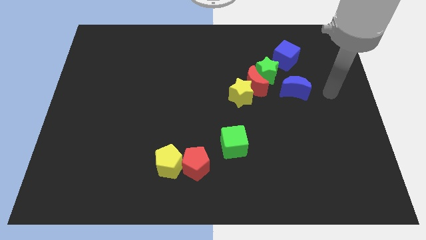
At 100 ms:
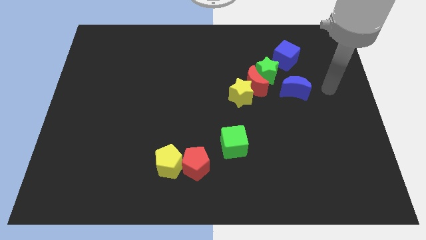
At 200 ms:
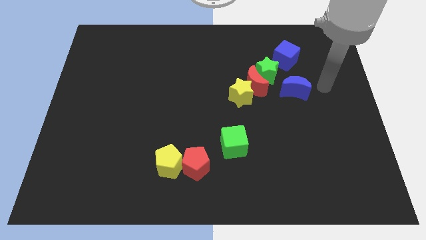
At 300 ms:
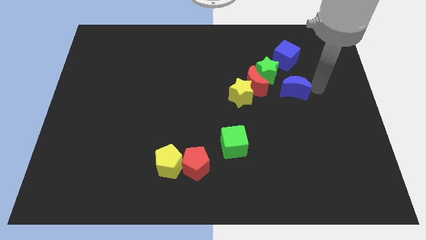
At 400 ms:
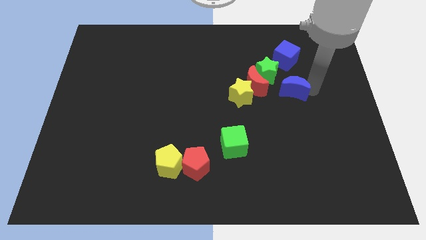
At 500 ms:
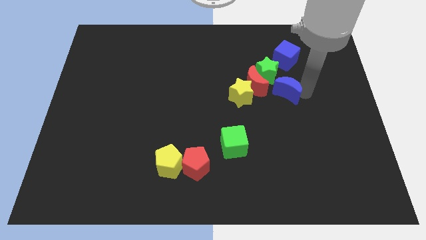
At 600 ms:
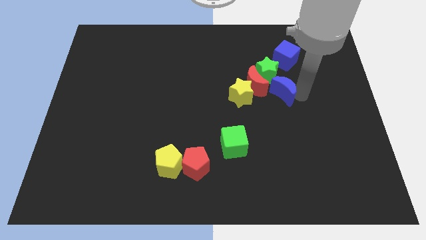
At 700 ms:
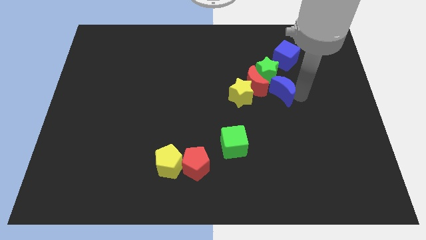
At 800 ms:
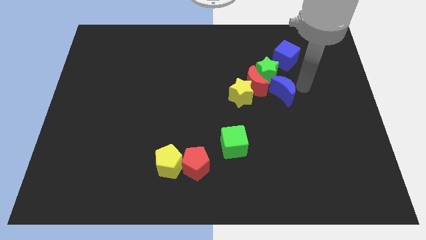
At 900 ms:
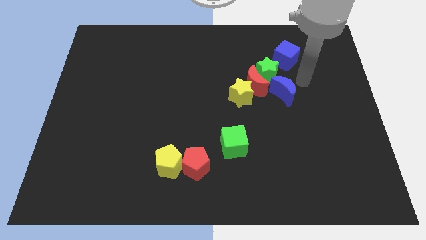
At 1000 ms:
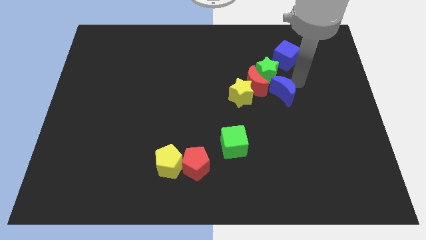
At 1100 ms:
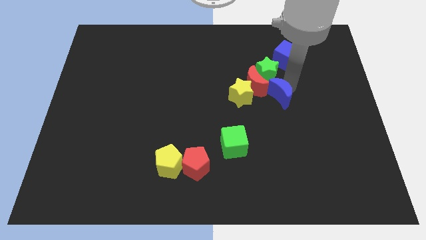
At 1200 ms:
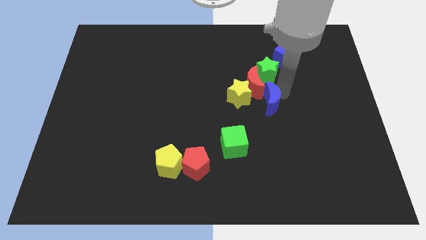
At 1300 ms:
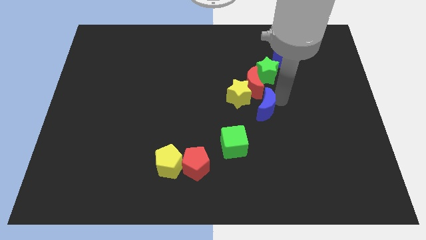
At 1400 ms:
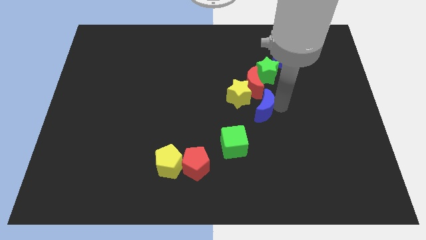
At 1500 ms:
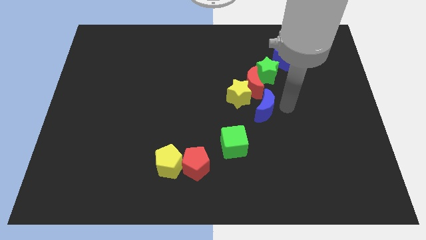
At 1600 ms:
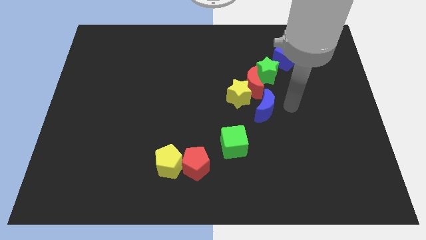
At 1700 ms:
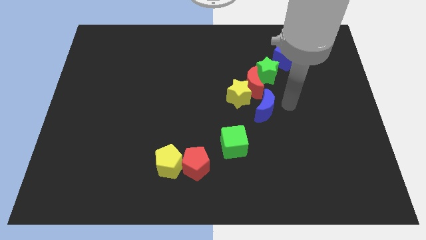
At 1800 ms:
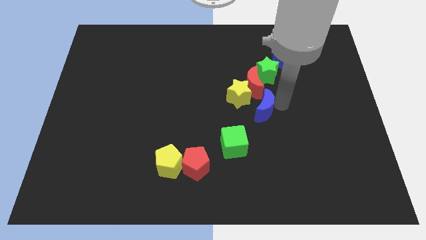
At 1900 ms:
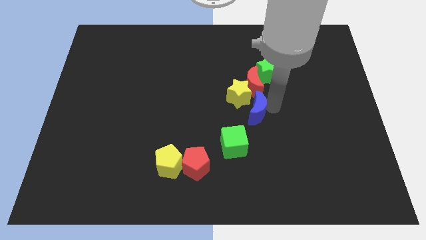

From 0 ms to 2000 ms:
place the blue crescent at the bottom side of the red crescent

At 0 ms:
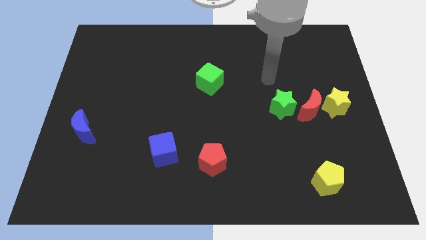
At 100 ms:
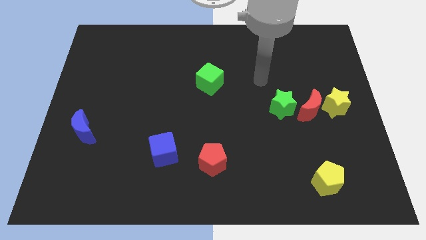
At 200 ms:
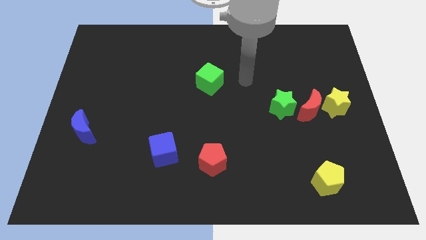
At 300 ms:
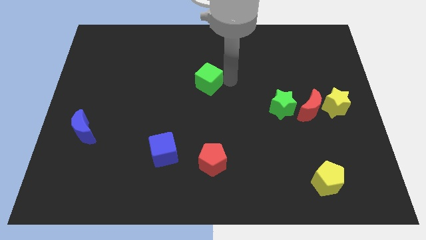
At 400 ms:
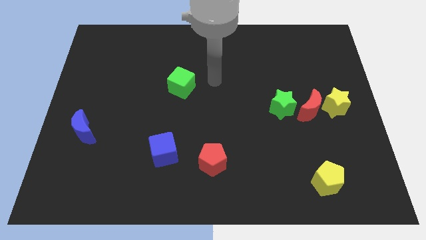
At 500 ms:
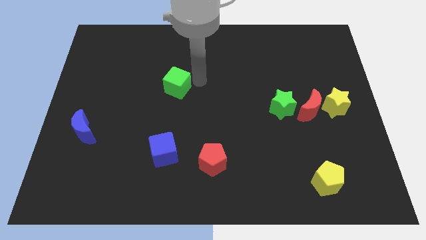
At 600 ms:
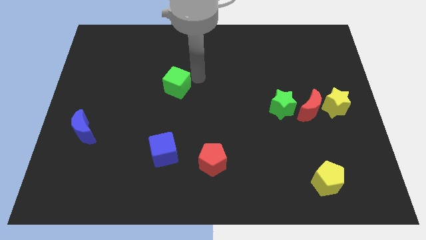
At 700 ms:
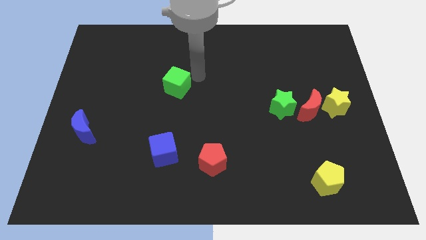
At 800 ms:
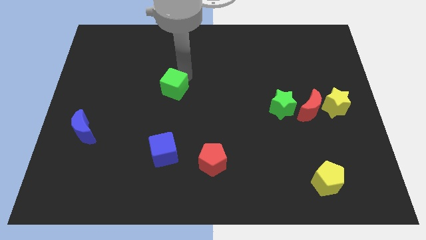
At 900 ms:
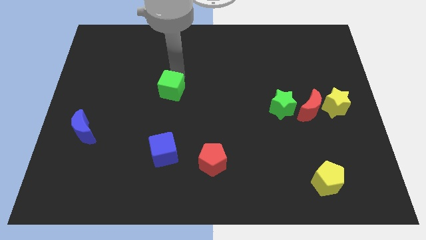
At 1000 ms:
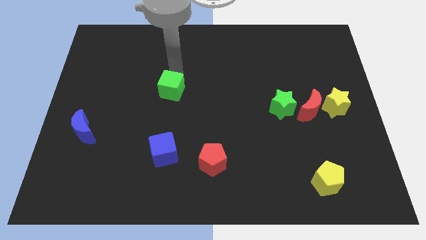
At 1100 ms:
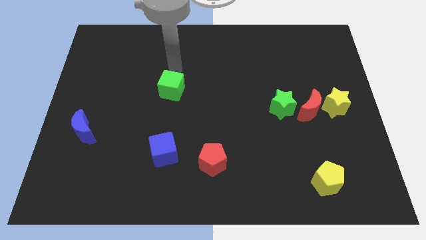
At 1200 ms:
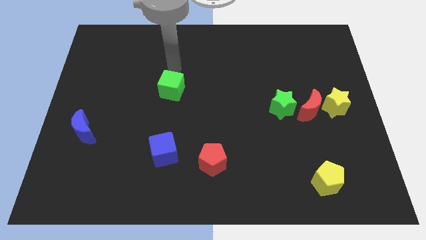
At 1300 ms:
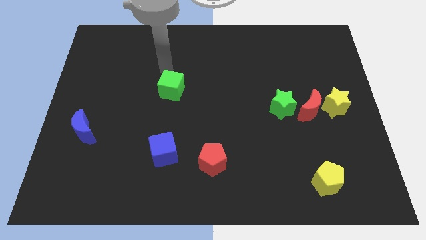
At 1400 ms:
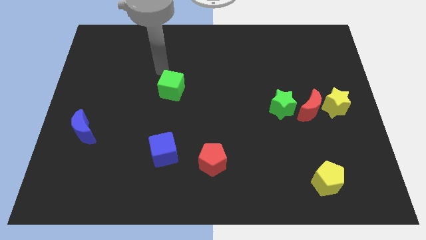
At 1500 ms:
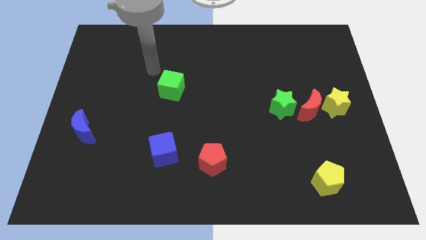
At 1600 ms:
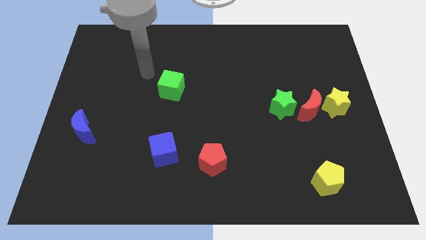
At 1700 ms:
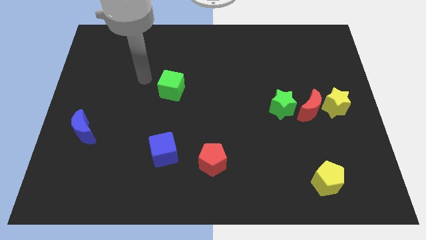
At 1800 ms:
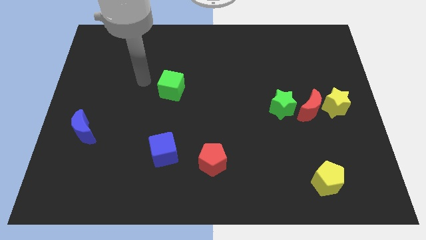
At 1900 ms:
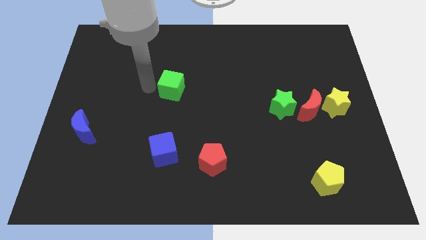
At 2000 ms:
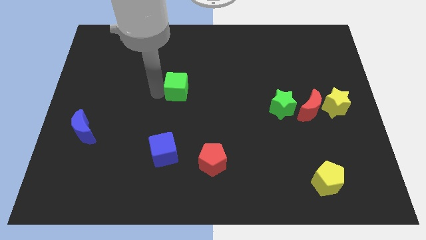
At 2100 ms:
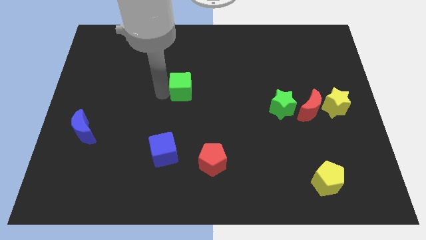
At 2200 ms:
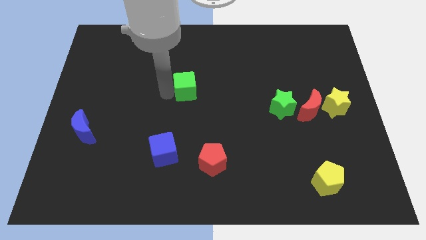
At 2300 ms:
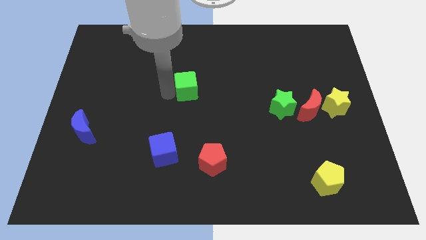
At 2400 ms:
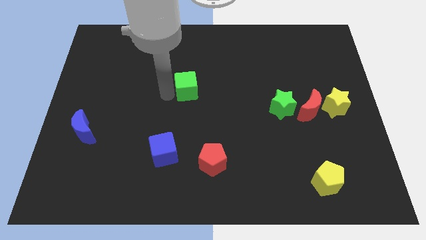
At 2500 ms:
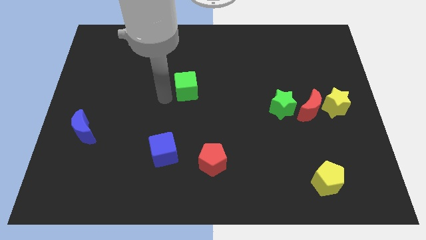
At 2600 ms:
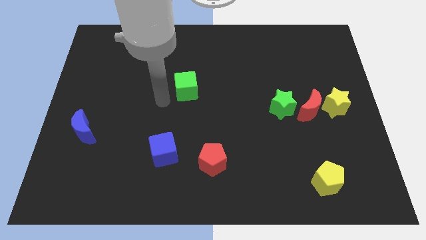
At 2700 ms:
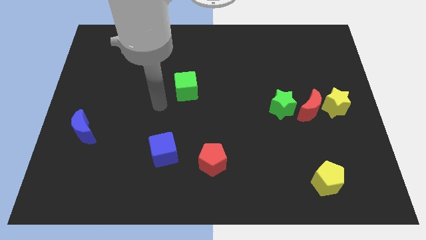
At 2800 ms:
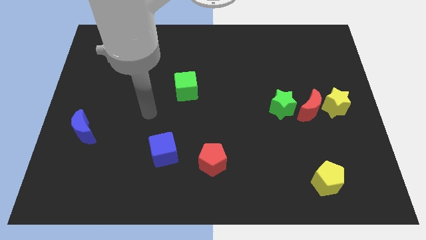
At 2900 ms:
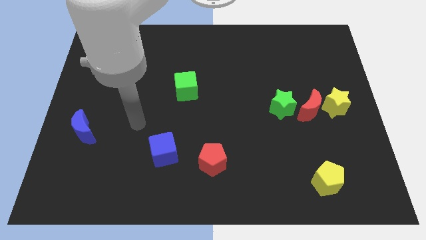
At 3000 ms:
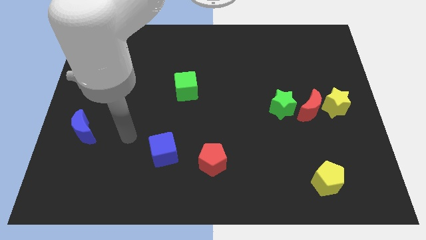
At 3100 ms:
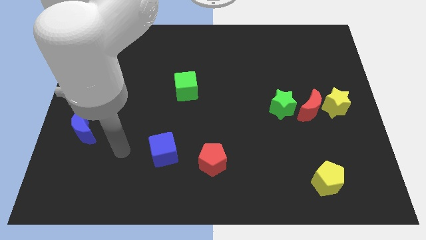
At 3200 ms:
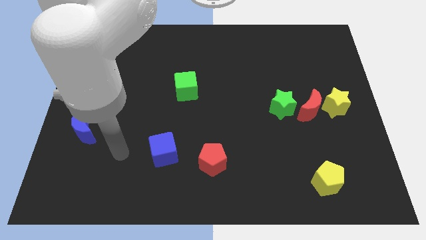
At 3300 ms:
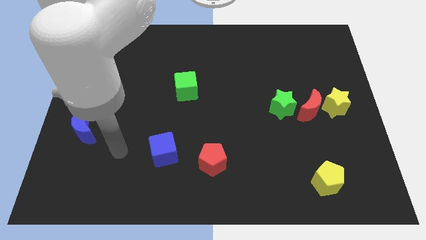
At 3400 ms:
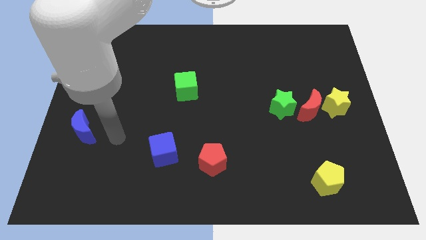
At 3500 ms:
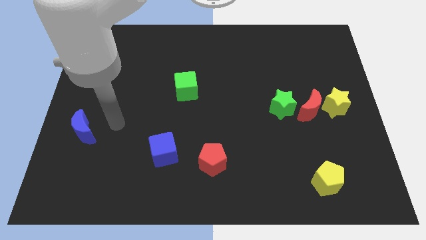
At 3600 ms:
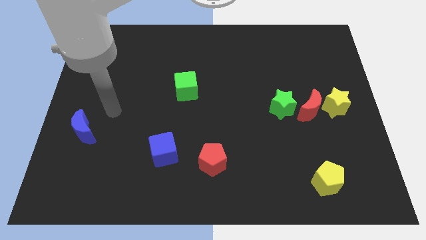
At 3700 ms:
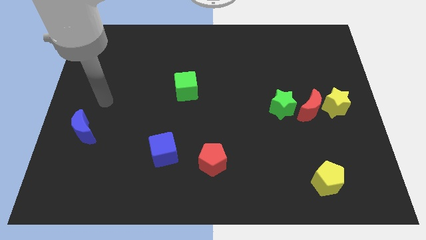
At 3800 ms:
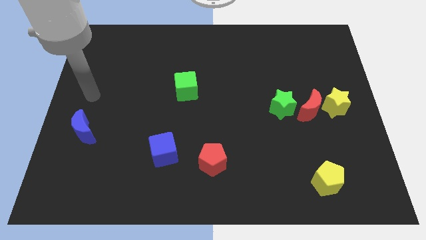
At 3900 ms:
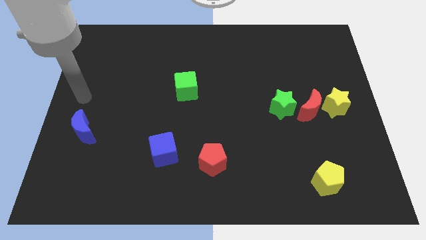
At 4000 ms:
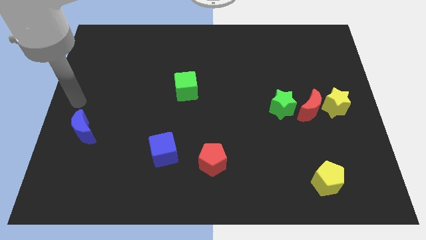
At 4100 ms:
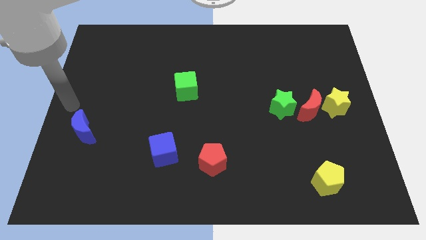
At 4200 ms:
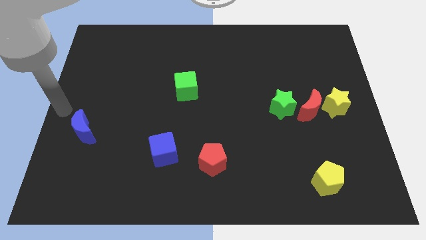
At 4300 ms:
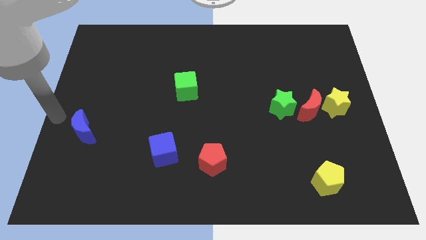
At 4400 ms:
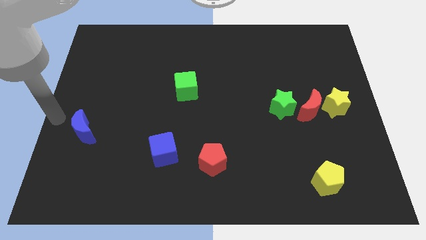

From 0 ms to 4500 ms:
slightly push the green cube

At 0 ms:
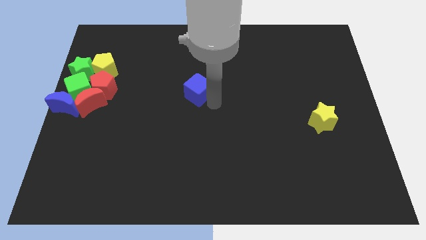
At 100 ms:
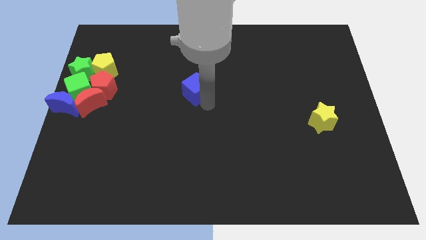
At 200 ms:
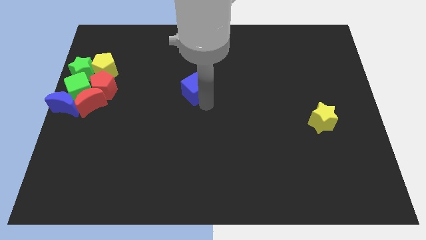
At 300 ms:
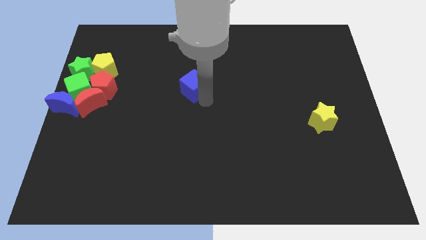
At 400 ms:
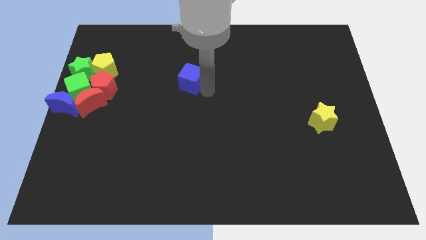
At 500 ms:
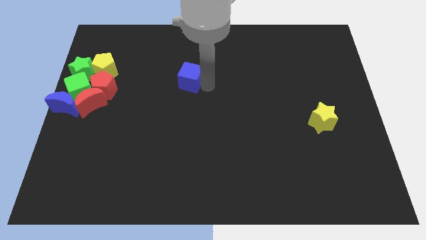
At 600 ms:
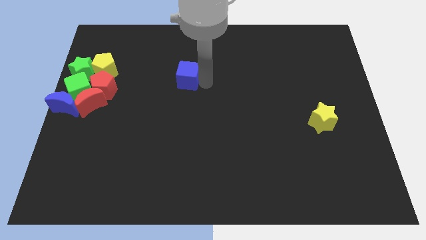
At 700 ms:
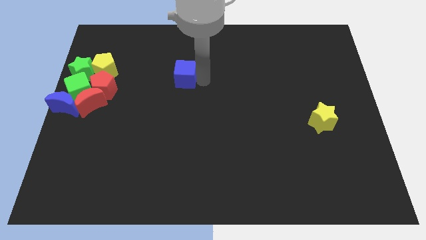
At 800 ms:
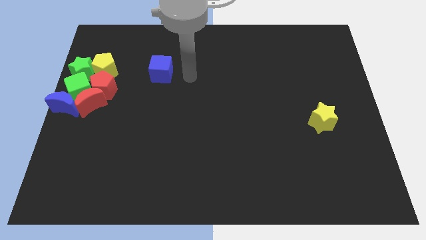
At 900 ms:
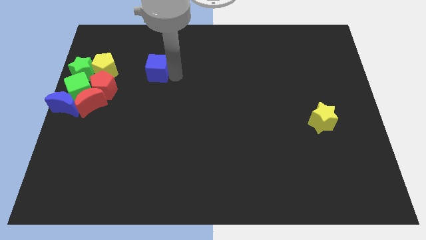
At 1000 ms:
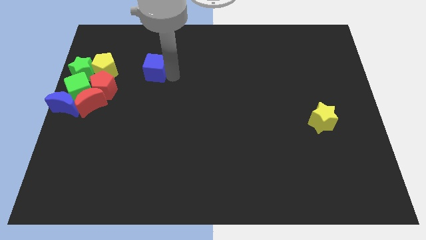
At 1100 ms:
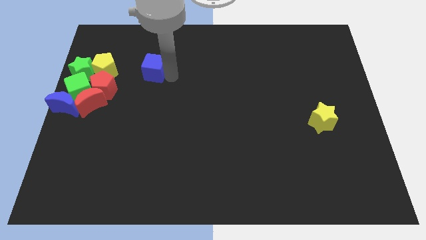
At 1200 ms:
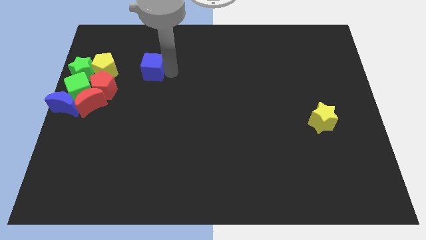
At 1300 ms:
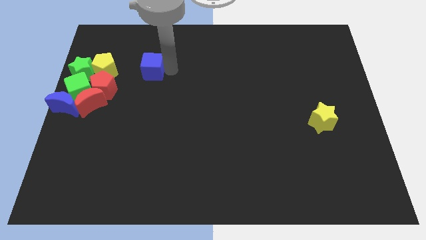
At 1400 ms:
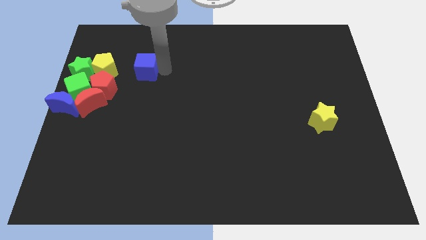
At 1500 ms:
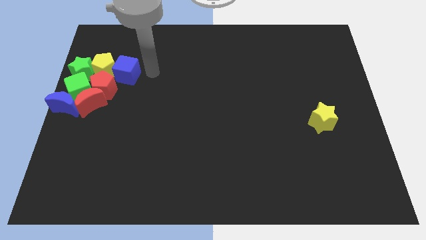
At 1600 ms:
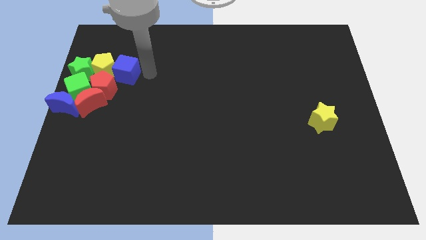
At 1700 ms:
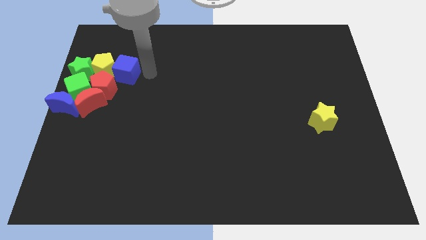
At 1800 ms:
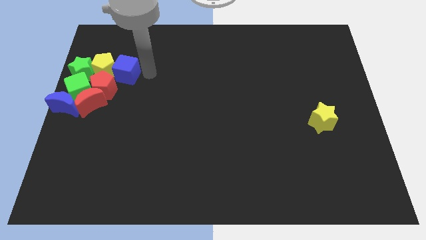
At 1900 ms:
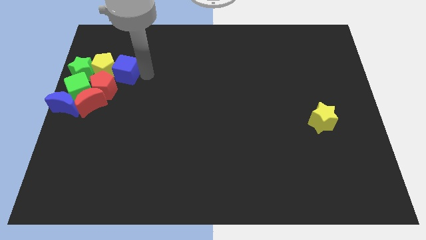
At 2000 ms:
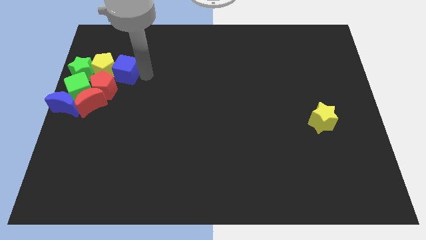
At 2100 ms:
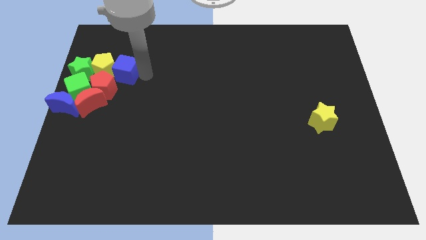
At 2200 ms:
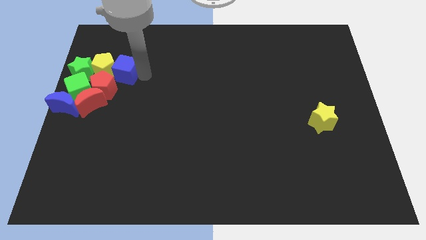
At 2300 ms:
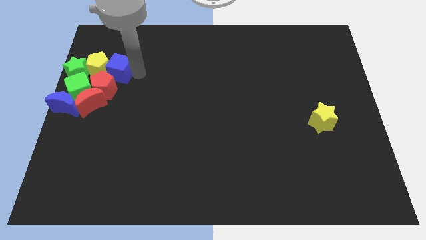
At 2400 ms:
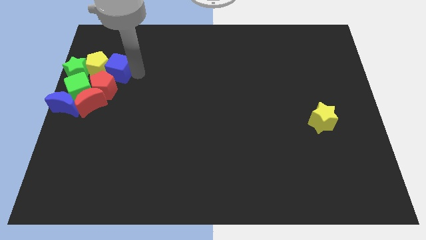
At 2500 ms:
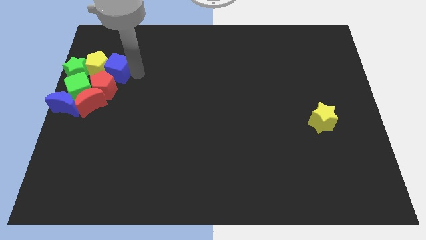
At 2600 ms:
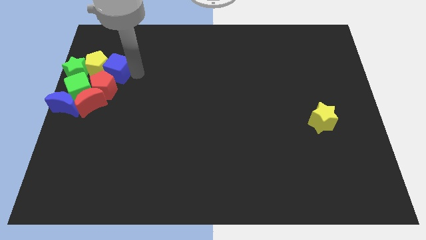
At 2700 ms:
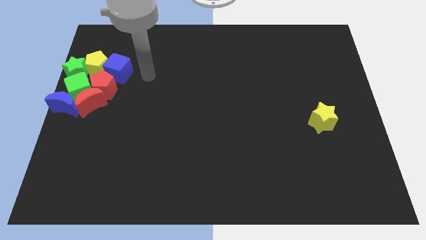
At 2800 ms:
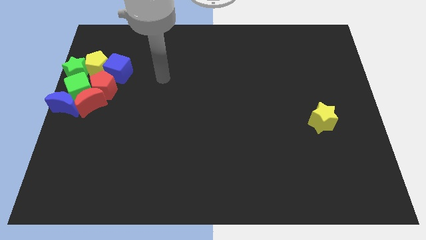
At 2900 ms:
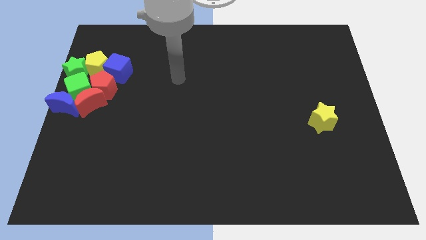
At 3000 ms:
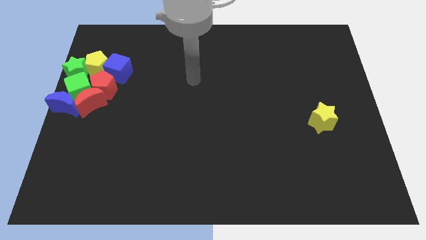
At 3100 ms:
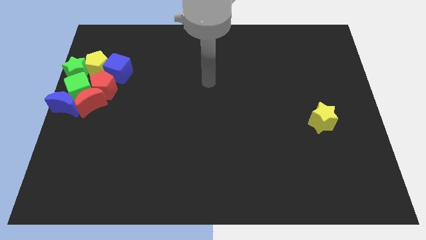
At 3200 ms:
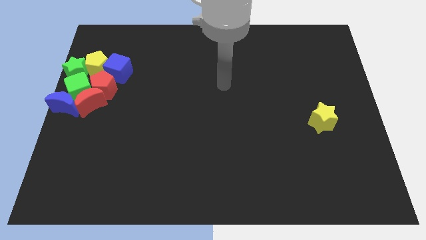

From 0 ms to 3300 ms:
slide blue cube into yellow pentagon
